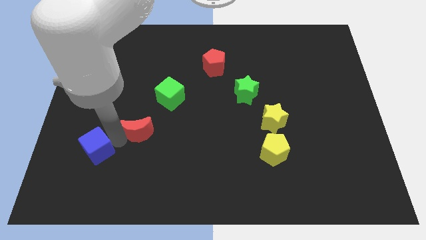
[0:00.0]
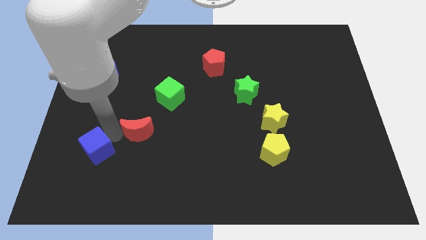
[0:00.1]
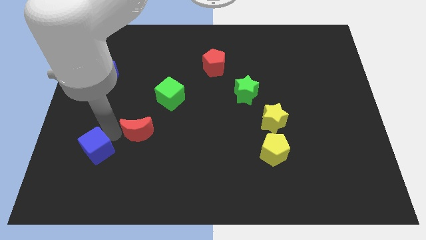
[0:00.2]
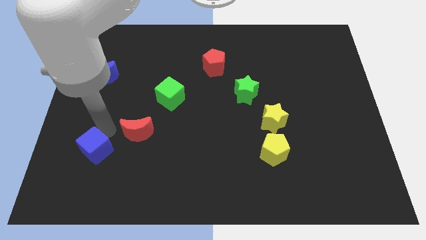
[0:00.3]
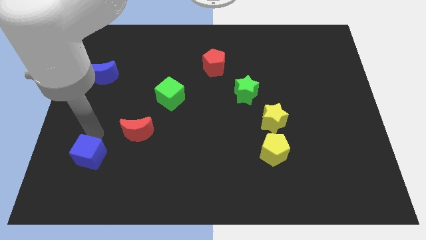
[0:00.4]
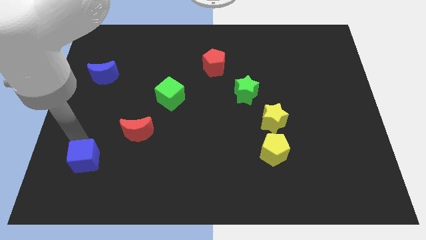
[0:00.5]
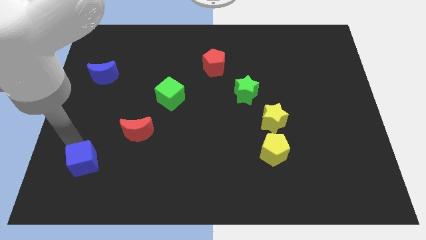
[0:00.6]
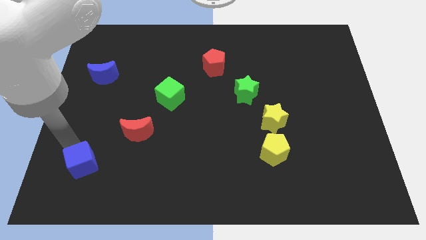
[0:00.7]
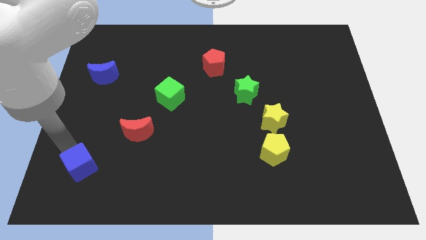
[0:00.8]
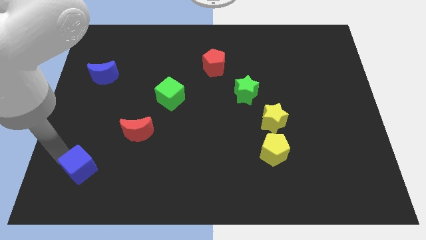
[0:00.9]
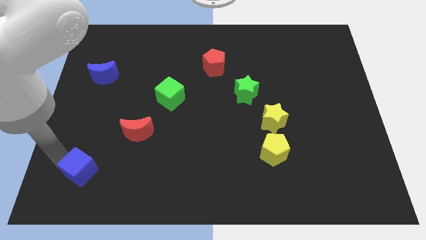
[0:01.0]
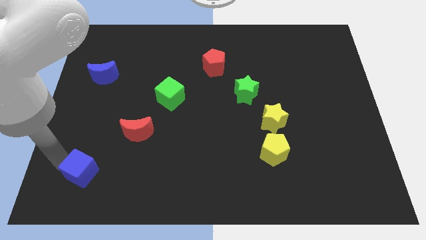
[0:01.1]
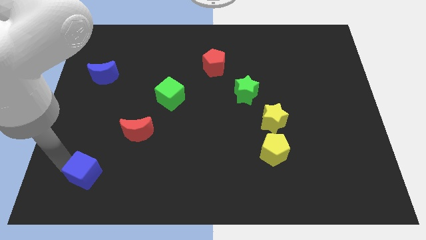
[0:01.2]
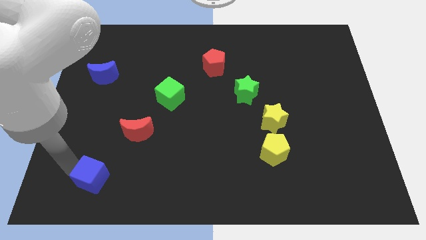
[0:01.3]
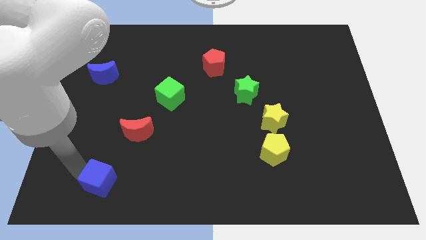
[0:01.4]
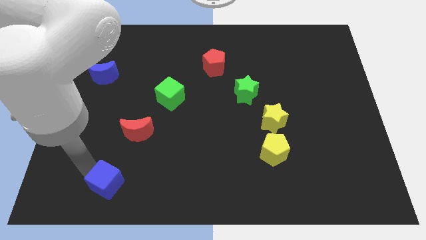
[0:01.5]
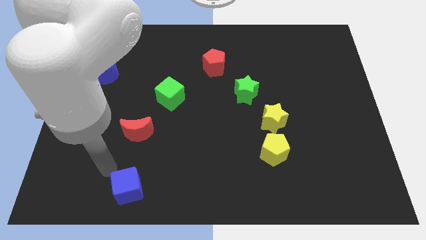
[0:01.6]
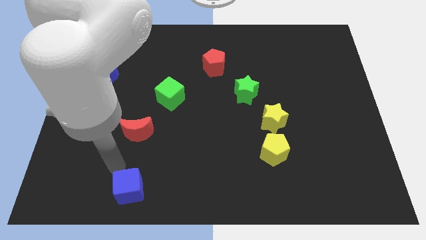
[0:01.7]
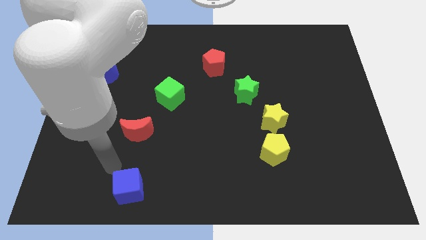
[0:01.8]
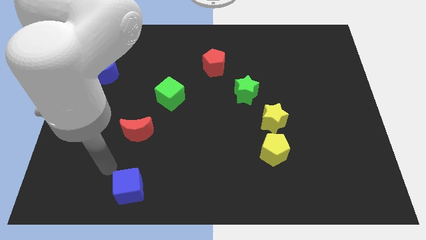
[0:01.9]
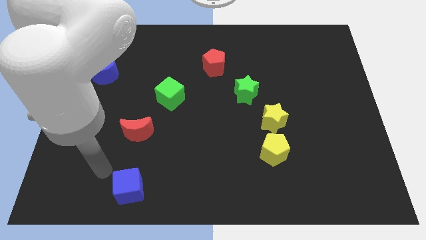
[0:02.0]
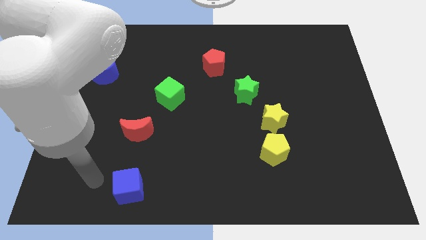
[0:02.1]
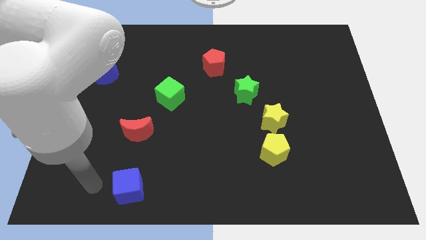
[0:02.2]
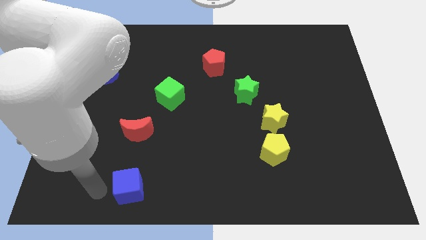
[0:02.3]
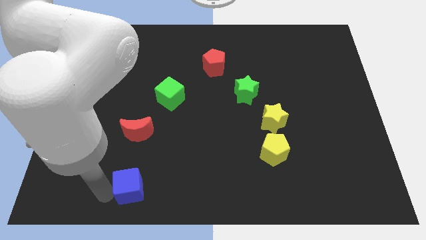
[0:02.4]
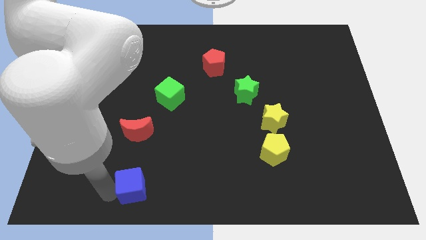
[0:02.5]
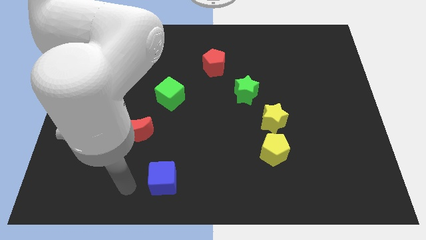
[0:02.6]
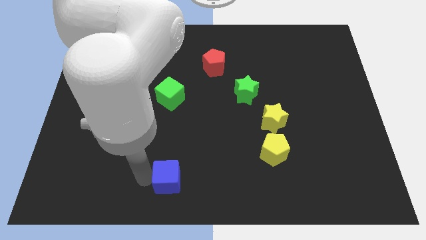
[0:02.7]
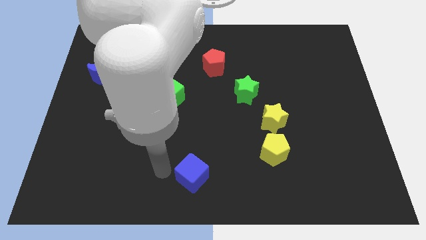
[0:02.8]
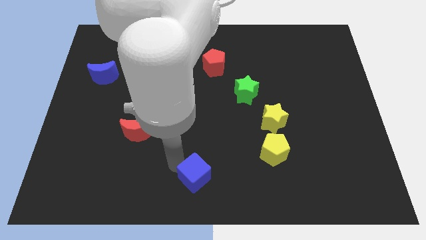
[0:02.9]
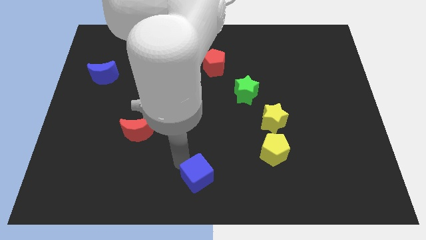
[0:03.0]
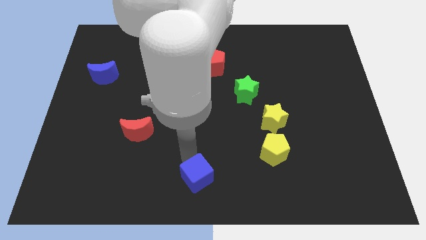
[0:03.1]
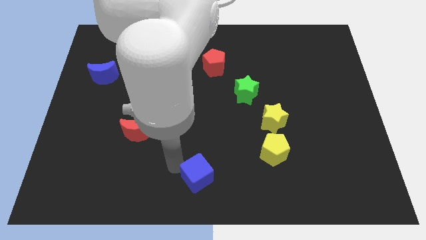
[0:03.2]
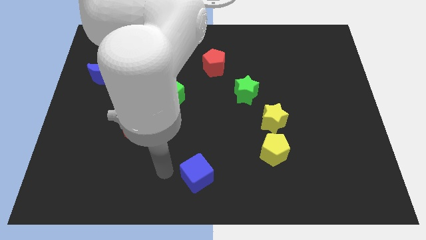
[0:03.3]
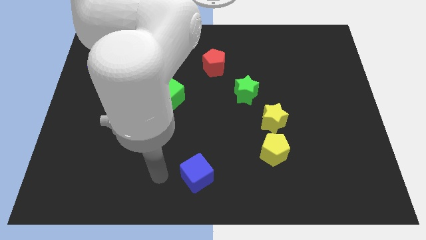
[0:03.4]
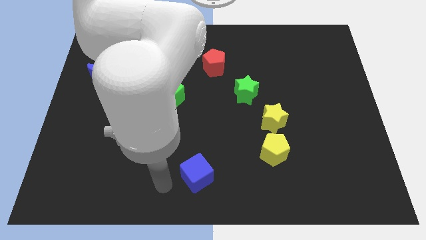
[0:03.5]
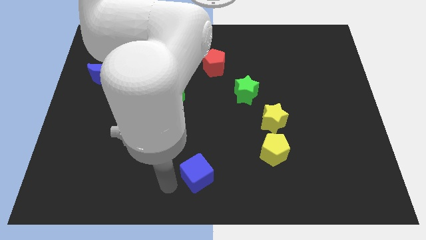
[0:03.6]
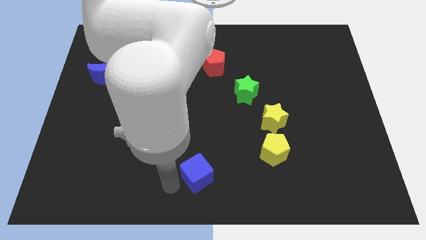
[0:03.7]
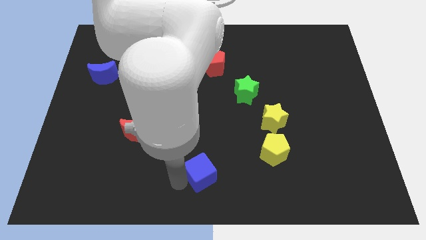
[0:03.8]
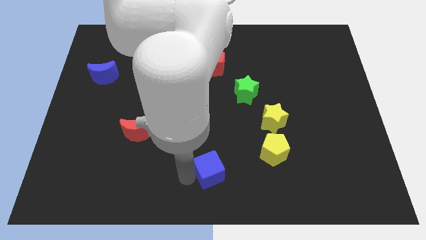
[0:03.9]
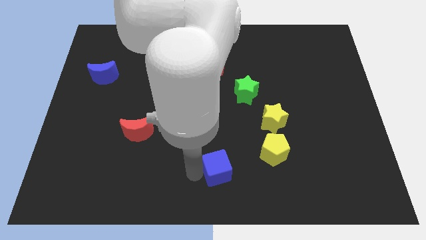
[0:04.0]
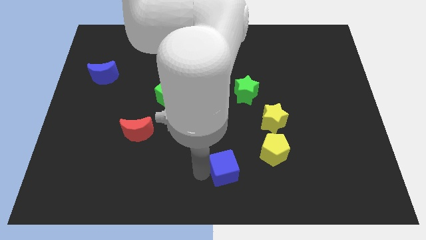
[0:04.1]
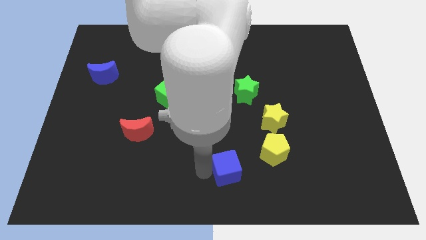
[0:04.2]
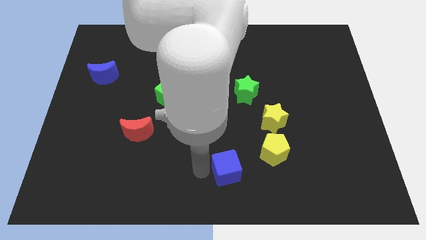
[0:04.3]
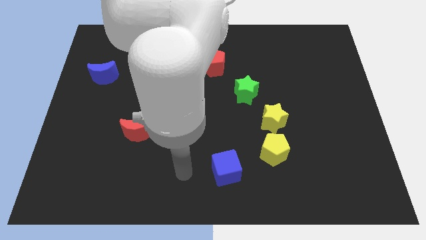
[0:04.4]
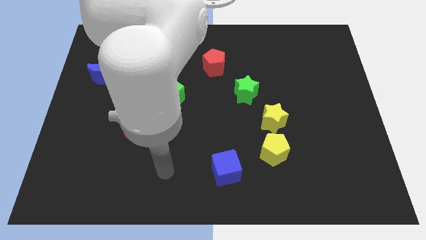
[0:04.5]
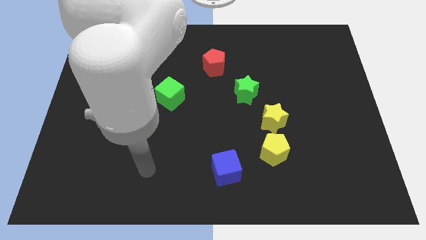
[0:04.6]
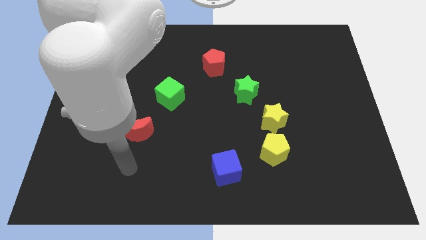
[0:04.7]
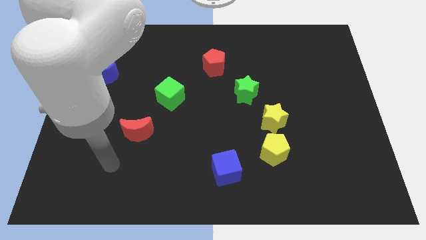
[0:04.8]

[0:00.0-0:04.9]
place the blue cube vertically below the red pentagon

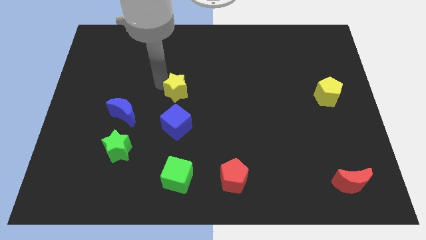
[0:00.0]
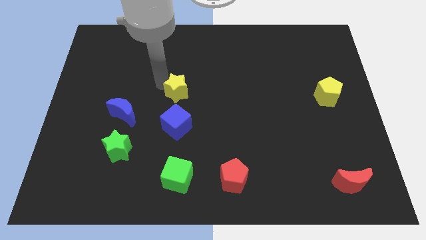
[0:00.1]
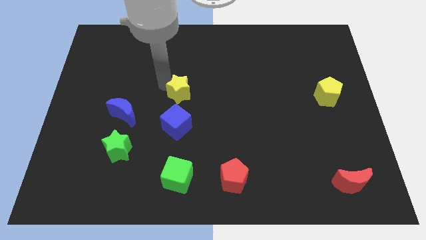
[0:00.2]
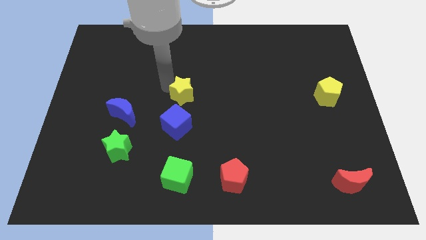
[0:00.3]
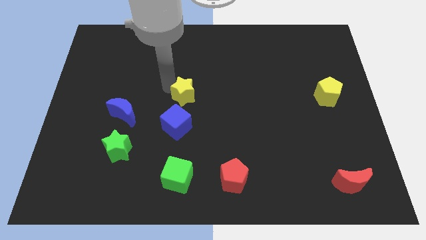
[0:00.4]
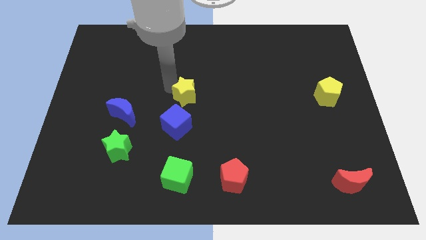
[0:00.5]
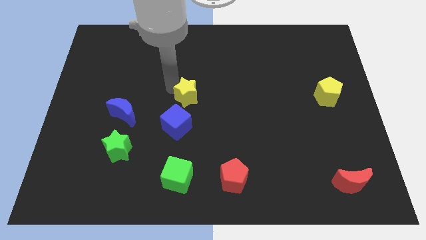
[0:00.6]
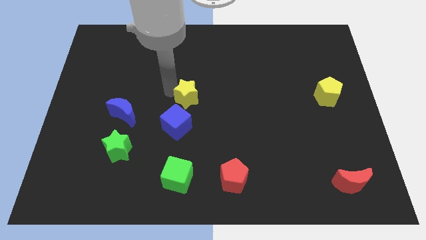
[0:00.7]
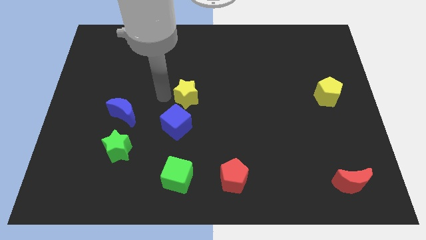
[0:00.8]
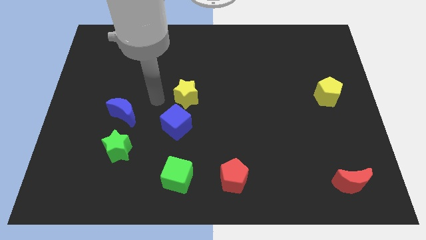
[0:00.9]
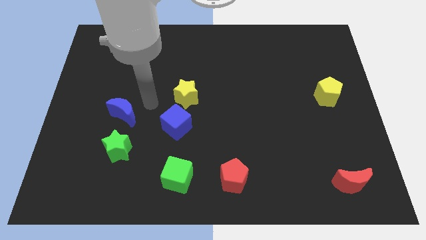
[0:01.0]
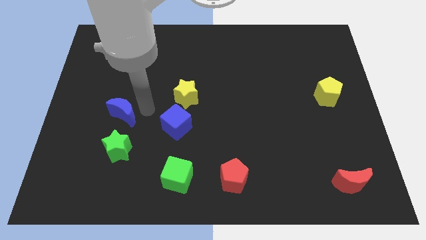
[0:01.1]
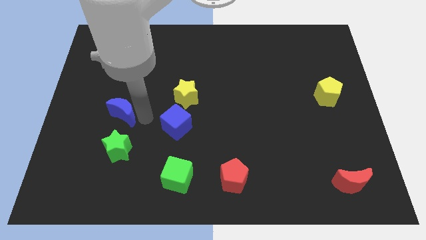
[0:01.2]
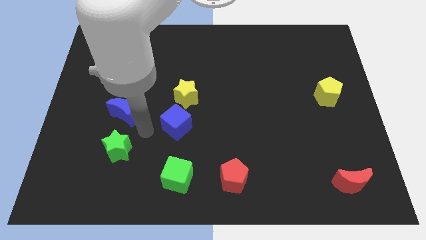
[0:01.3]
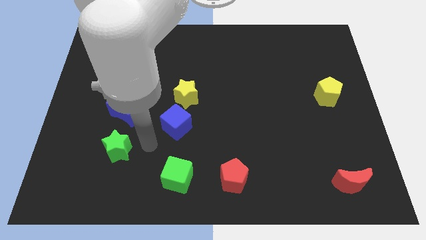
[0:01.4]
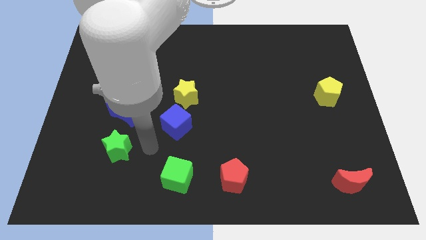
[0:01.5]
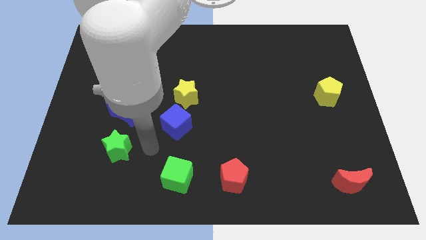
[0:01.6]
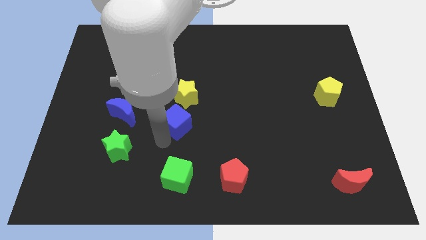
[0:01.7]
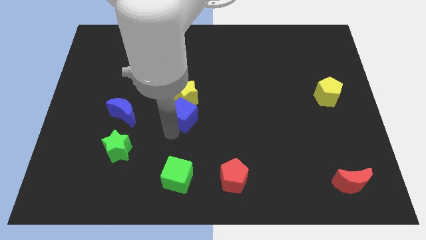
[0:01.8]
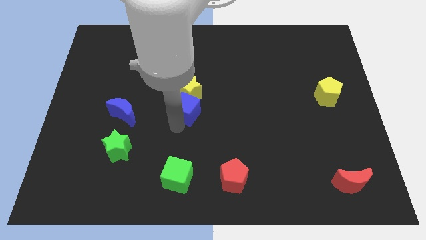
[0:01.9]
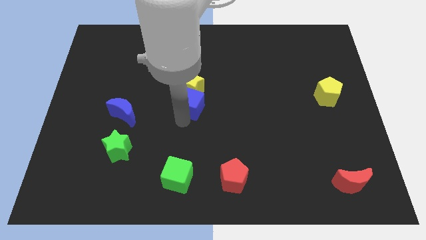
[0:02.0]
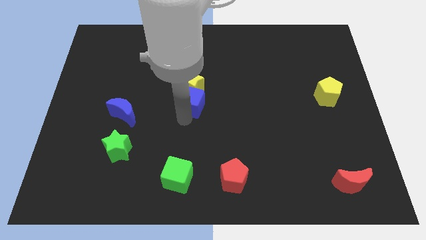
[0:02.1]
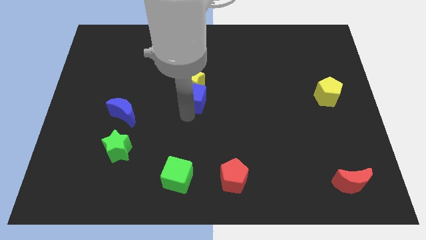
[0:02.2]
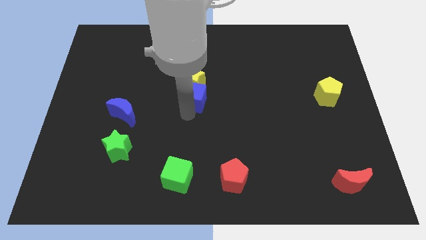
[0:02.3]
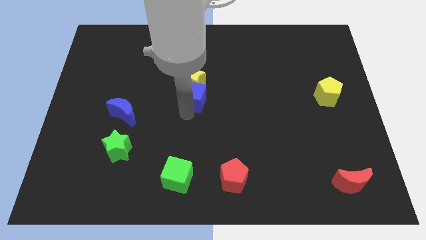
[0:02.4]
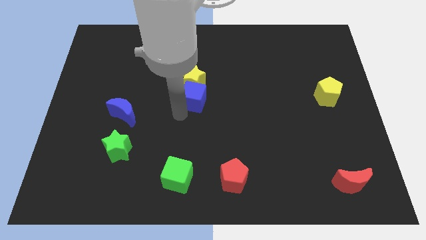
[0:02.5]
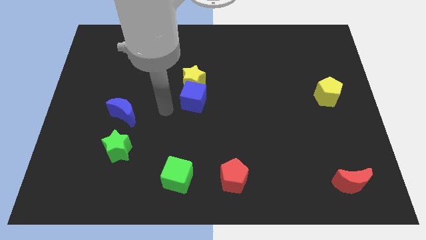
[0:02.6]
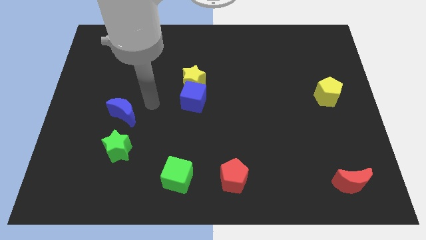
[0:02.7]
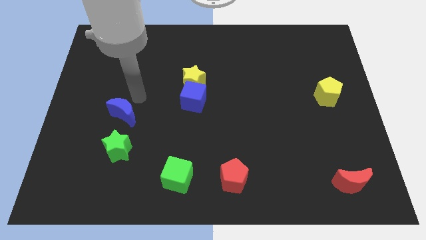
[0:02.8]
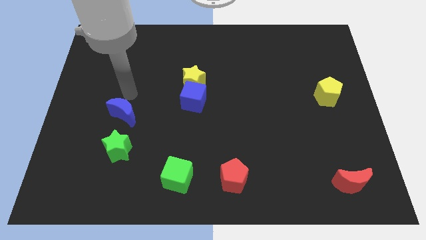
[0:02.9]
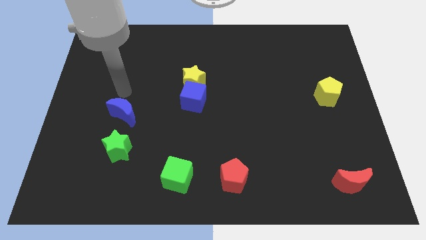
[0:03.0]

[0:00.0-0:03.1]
put the yellow star and blue cube at the left side of the yellow pentagon

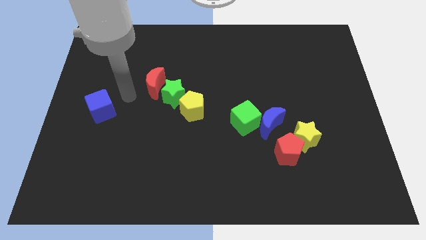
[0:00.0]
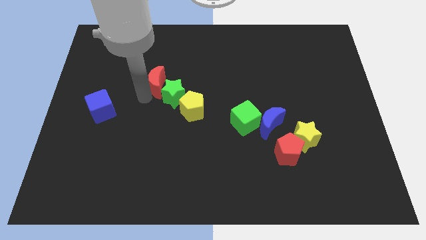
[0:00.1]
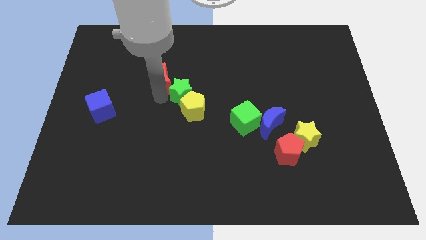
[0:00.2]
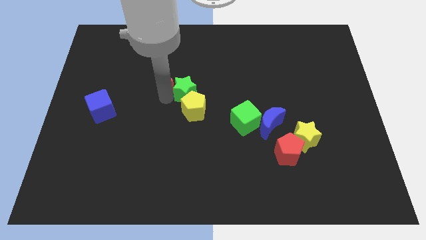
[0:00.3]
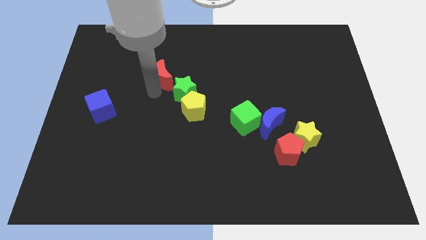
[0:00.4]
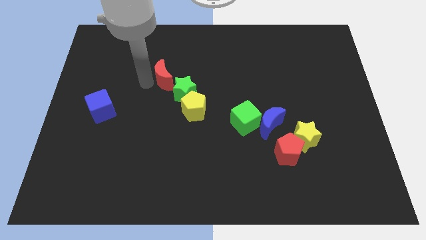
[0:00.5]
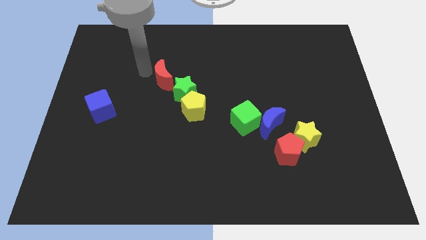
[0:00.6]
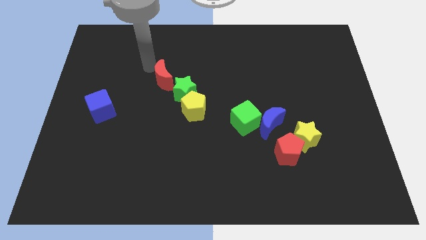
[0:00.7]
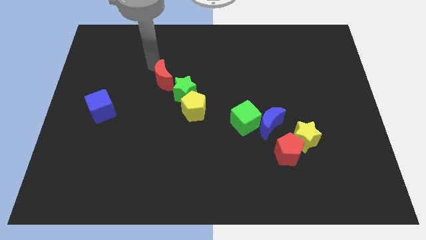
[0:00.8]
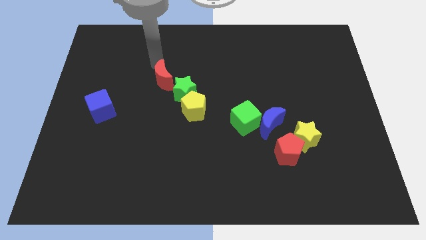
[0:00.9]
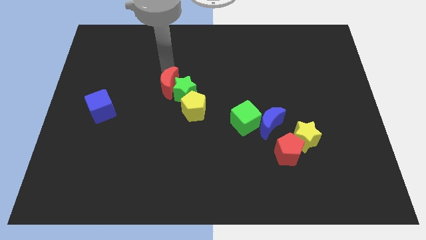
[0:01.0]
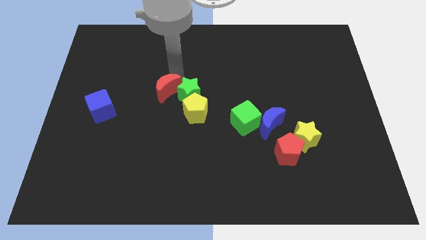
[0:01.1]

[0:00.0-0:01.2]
slide the red moon into the green star
